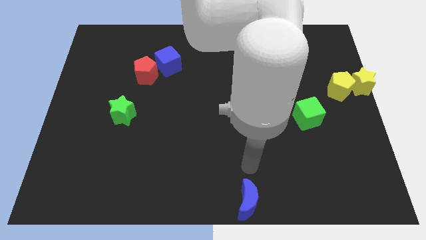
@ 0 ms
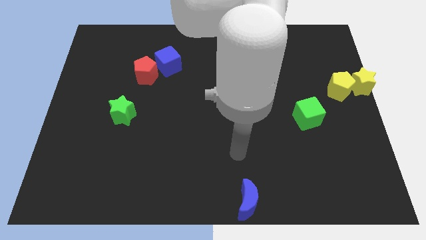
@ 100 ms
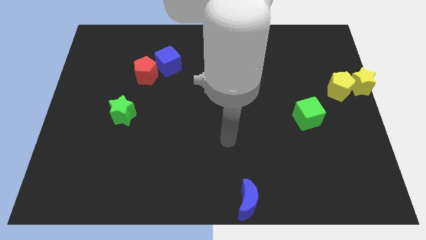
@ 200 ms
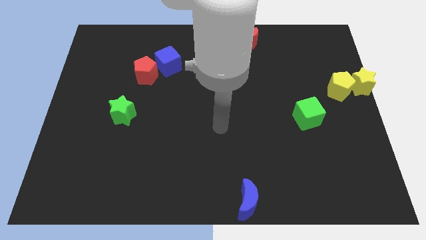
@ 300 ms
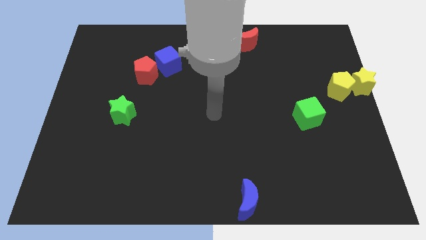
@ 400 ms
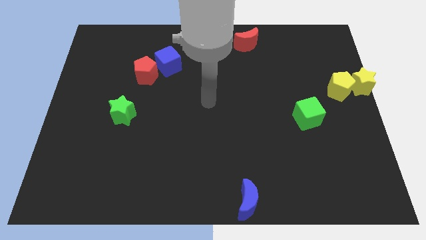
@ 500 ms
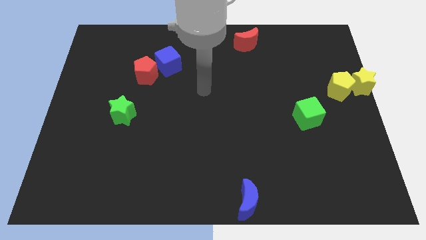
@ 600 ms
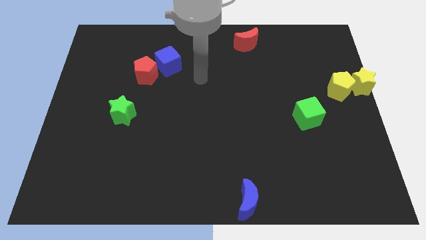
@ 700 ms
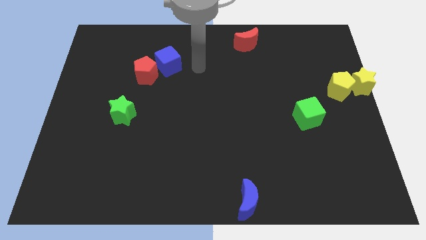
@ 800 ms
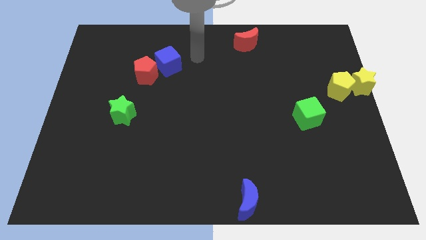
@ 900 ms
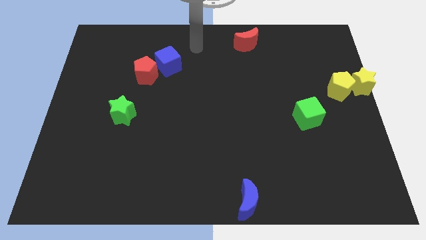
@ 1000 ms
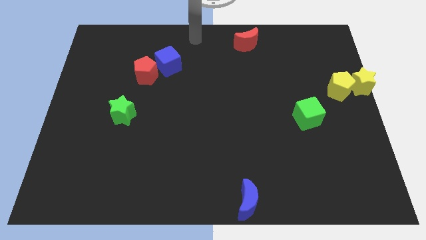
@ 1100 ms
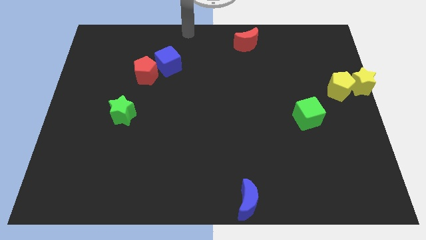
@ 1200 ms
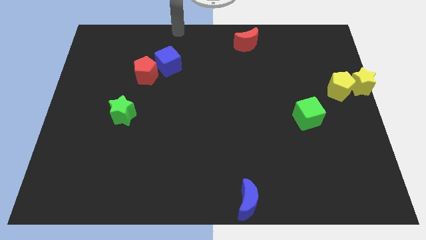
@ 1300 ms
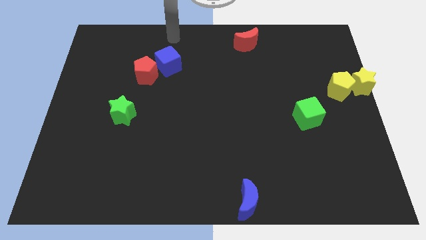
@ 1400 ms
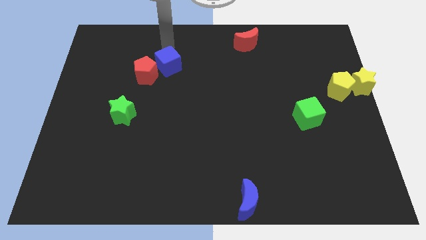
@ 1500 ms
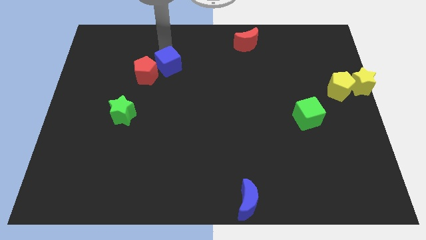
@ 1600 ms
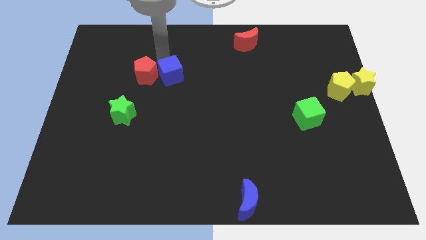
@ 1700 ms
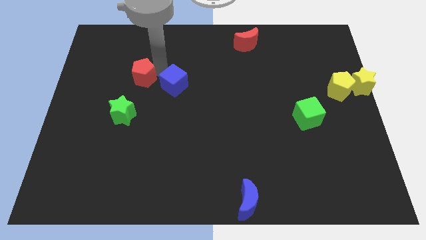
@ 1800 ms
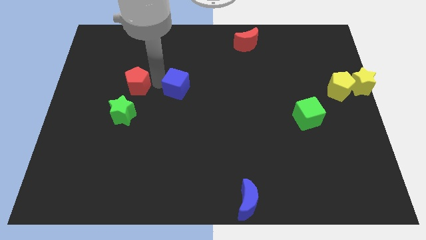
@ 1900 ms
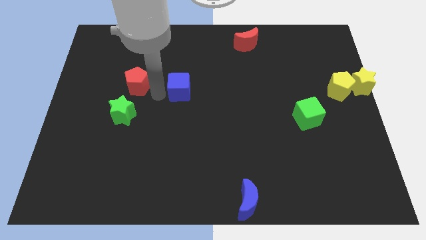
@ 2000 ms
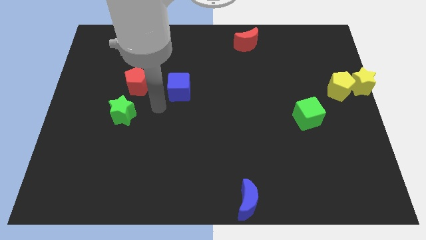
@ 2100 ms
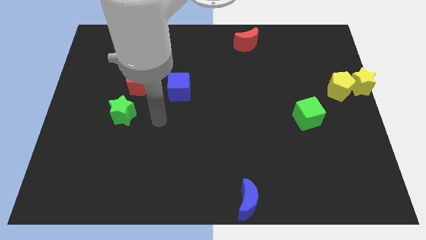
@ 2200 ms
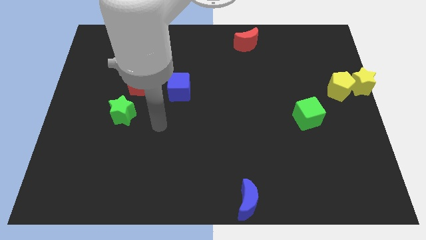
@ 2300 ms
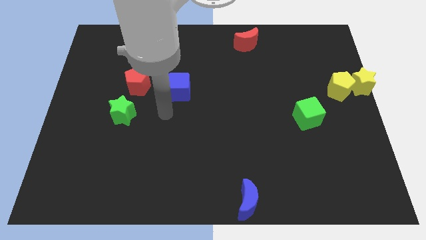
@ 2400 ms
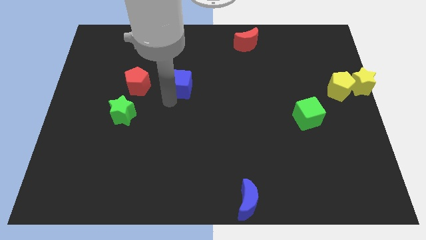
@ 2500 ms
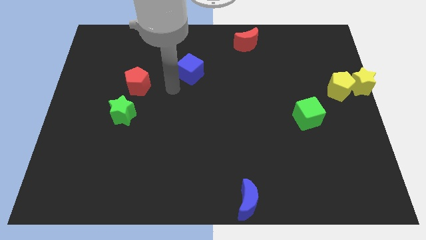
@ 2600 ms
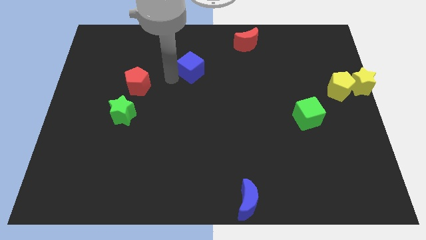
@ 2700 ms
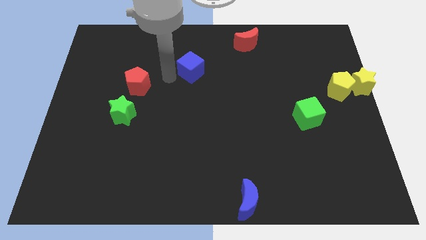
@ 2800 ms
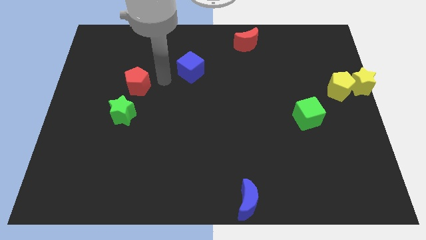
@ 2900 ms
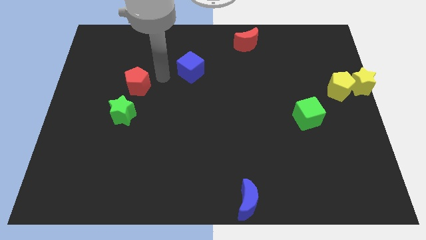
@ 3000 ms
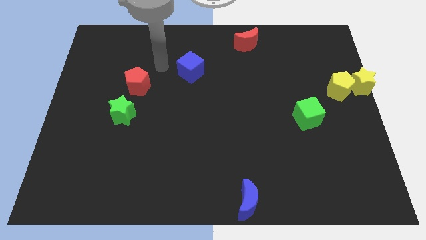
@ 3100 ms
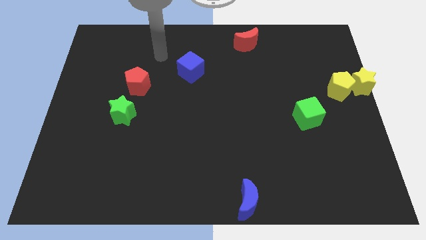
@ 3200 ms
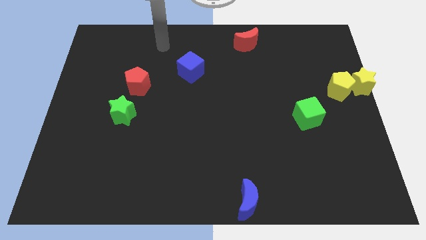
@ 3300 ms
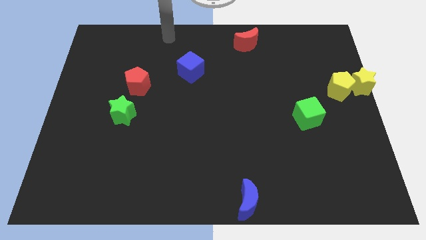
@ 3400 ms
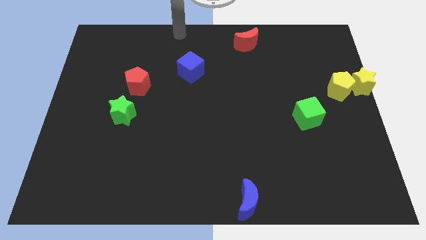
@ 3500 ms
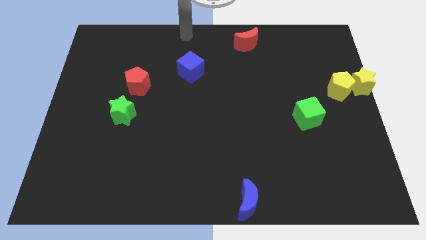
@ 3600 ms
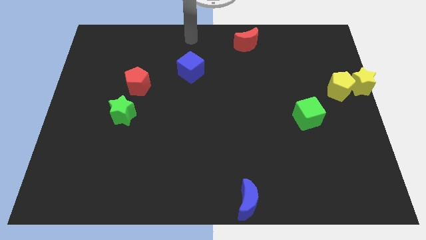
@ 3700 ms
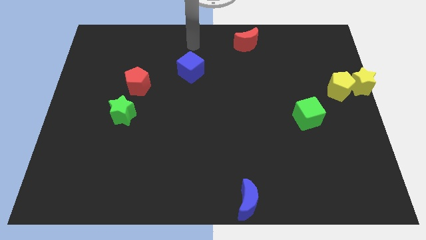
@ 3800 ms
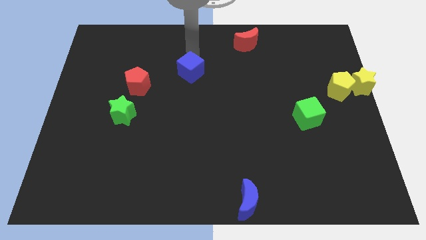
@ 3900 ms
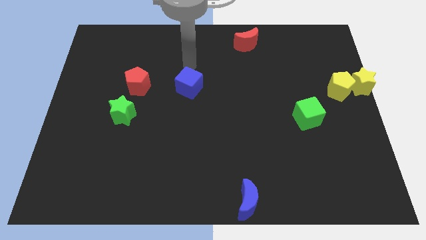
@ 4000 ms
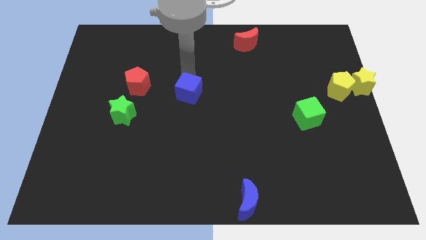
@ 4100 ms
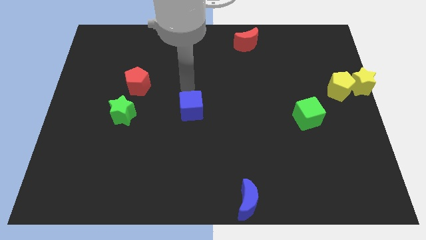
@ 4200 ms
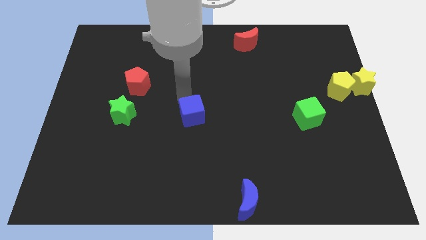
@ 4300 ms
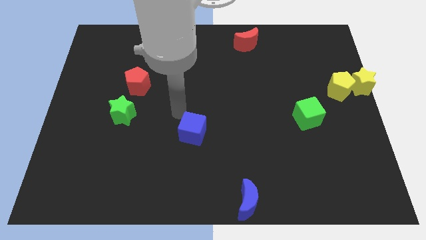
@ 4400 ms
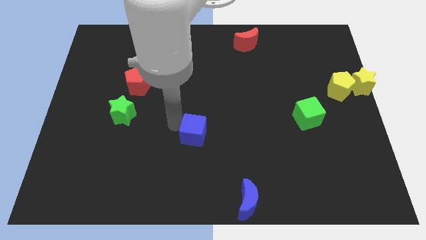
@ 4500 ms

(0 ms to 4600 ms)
push the blue cube towards the blue crescent

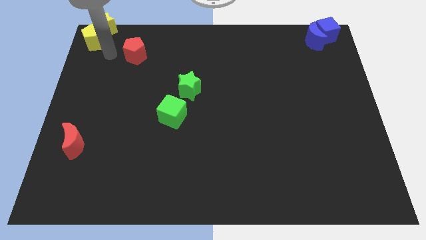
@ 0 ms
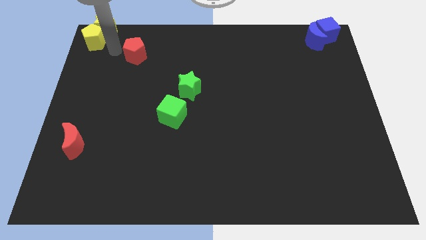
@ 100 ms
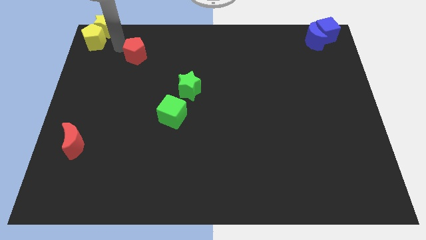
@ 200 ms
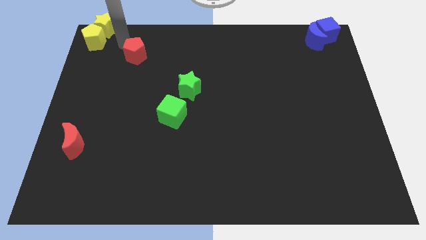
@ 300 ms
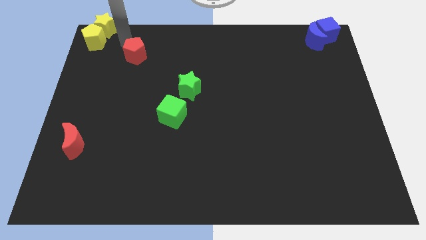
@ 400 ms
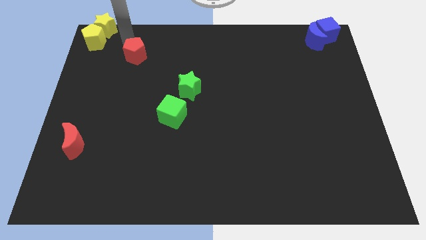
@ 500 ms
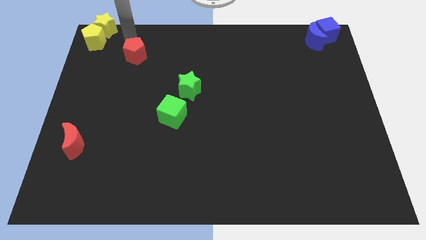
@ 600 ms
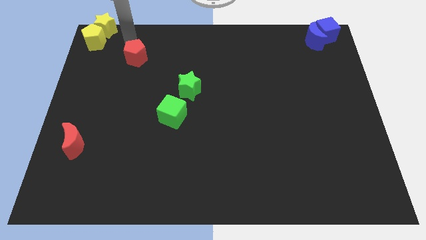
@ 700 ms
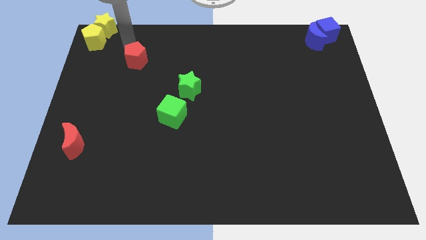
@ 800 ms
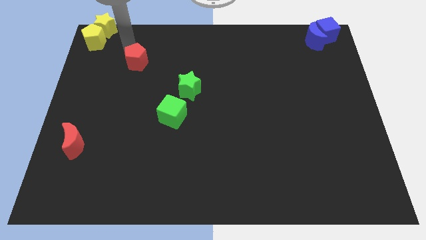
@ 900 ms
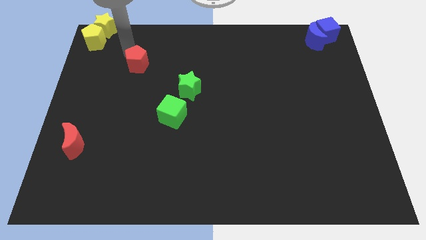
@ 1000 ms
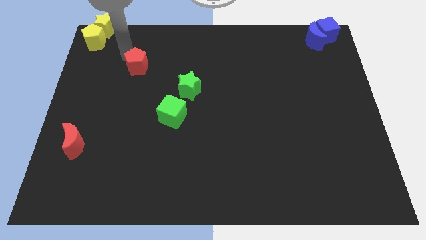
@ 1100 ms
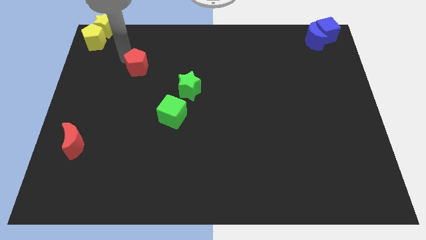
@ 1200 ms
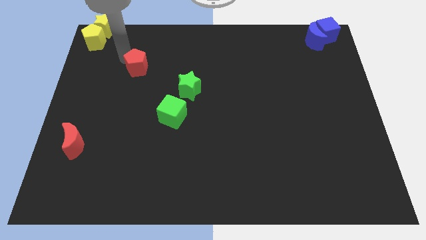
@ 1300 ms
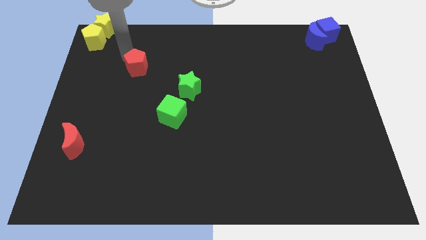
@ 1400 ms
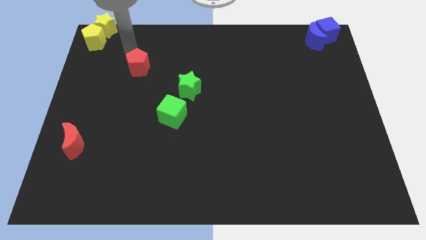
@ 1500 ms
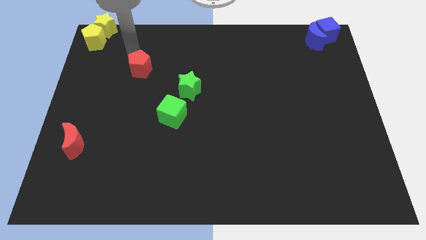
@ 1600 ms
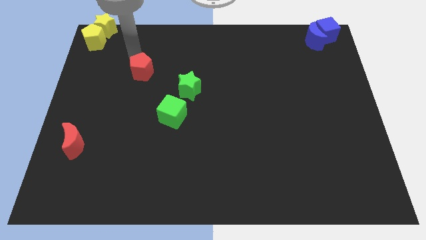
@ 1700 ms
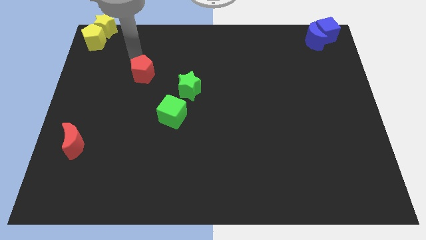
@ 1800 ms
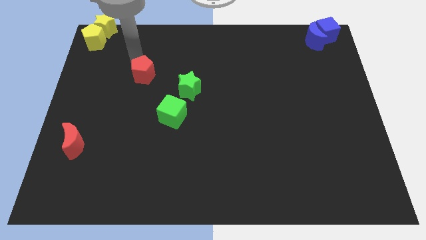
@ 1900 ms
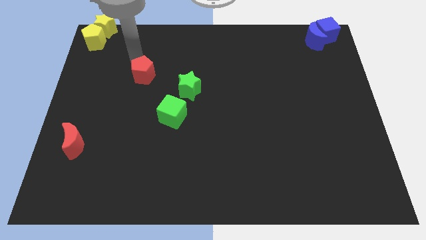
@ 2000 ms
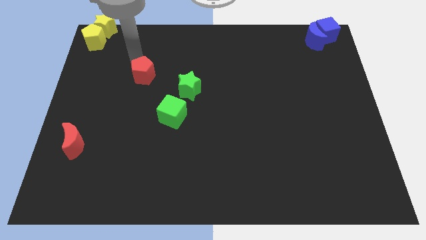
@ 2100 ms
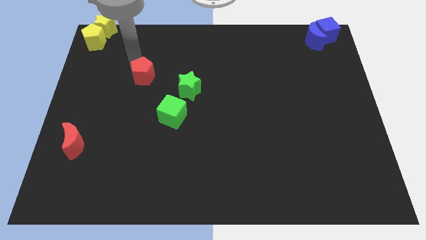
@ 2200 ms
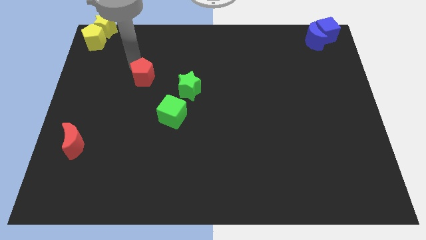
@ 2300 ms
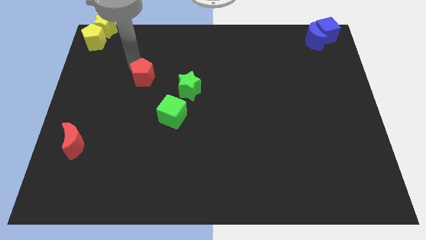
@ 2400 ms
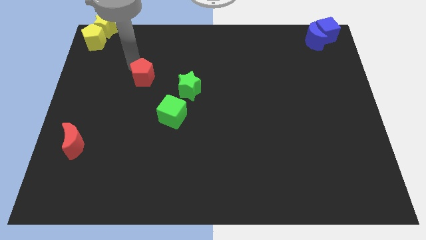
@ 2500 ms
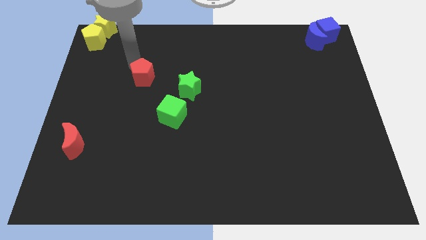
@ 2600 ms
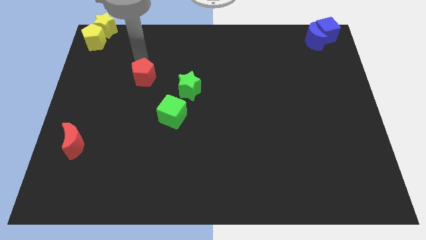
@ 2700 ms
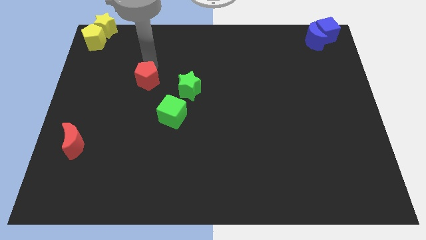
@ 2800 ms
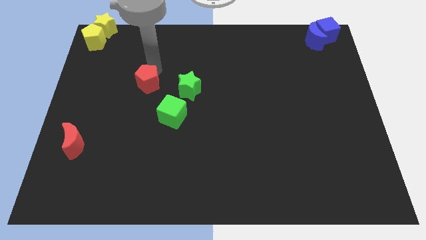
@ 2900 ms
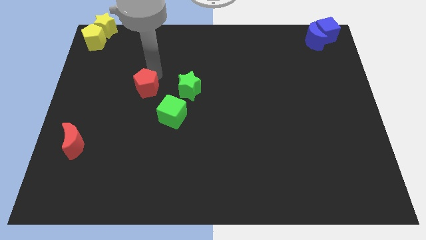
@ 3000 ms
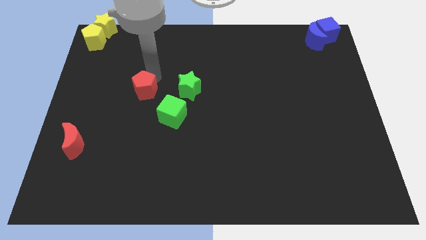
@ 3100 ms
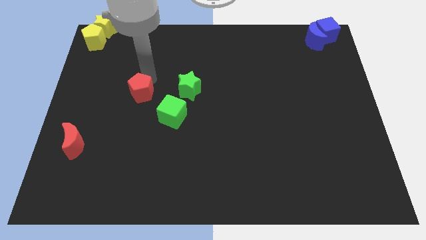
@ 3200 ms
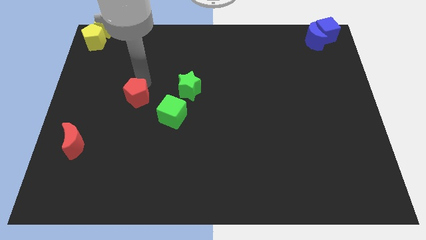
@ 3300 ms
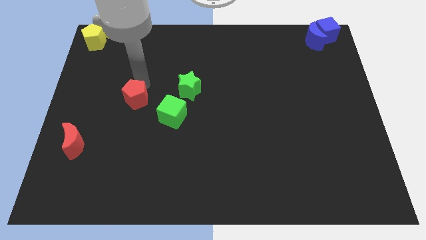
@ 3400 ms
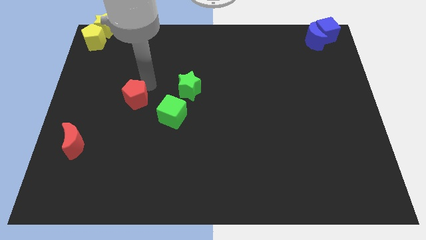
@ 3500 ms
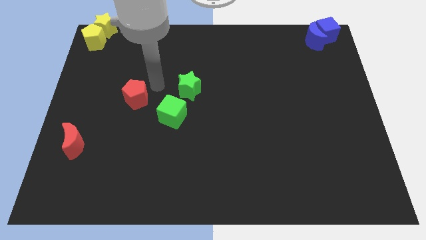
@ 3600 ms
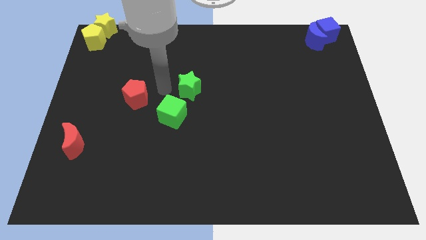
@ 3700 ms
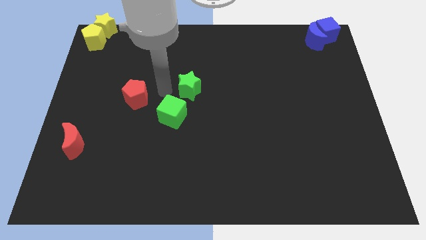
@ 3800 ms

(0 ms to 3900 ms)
move the red pentagon downwards

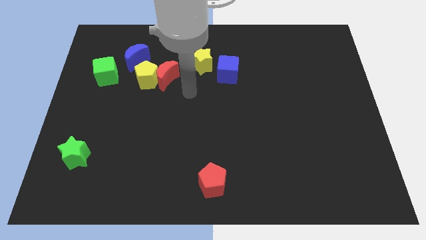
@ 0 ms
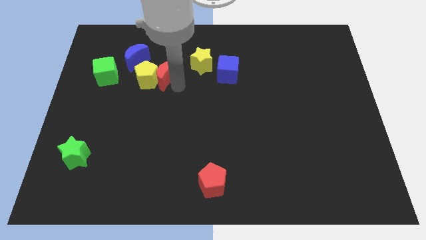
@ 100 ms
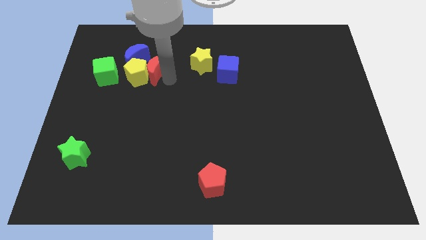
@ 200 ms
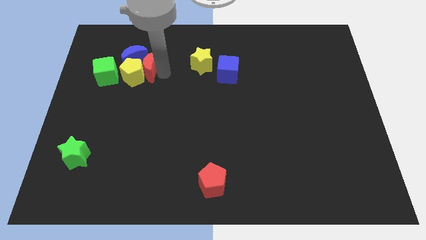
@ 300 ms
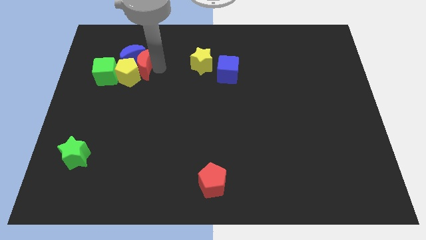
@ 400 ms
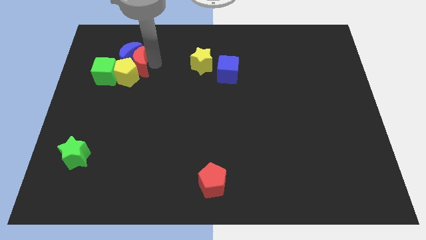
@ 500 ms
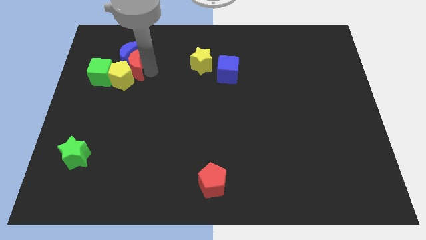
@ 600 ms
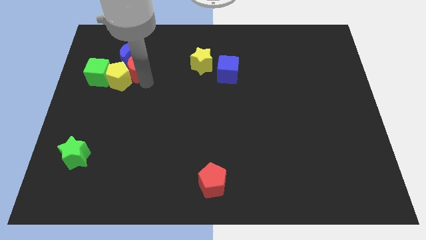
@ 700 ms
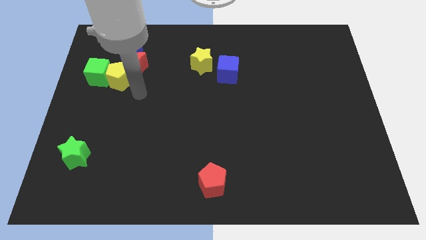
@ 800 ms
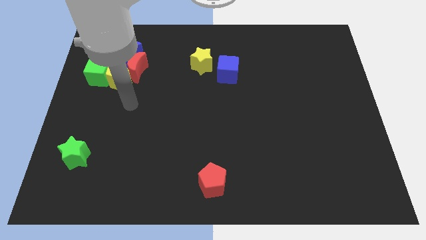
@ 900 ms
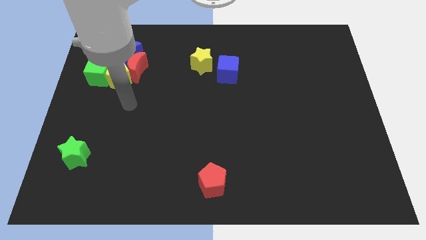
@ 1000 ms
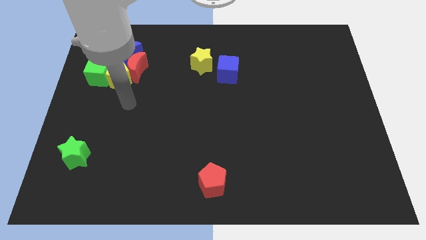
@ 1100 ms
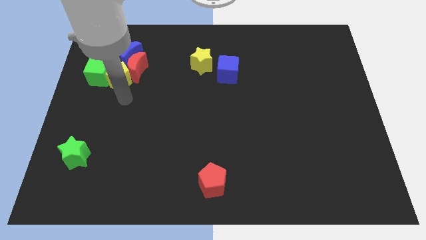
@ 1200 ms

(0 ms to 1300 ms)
push group of blocks towards left side of the board
